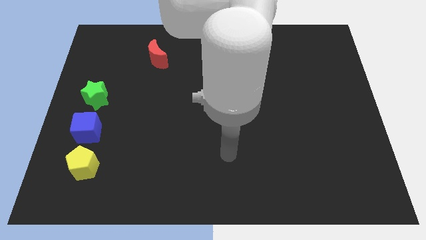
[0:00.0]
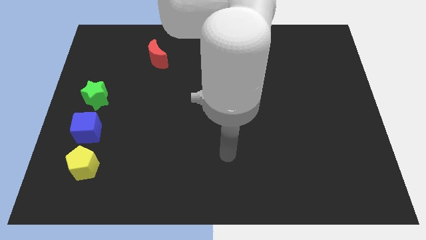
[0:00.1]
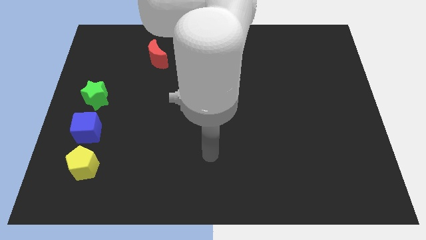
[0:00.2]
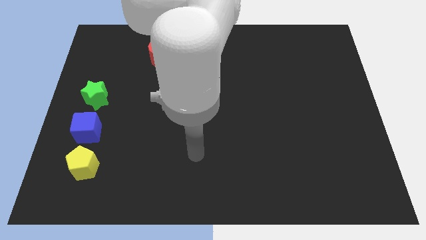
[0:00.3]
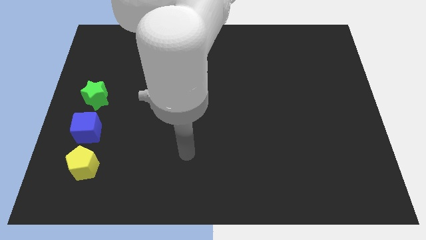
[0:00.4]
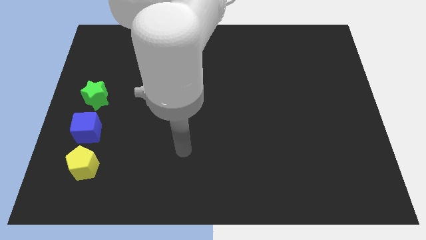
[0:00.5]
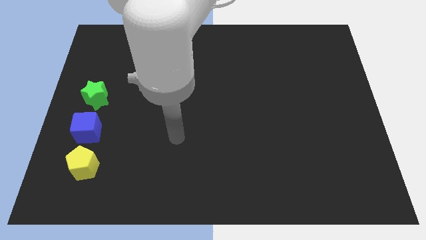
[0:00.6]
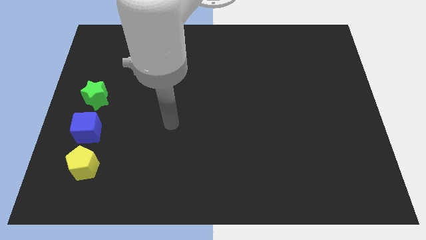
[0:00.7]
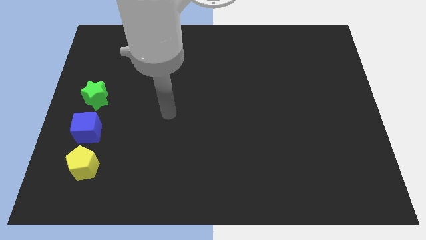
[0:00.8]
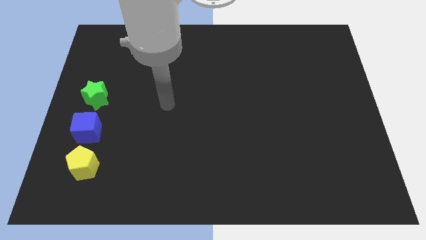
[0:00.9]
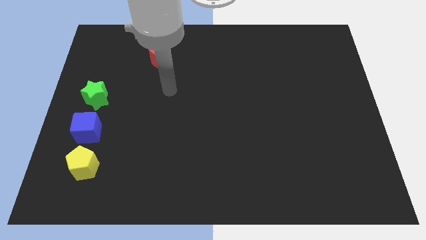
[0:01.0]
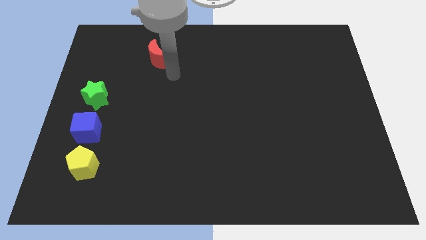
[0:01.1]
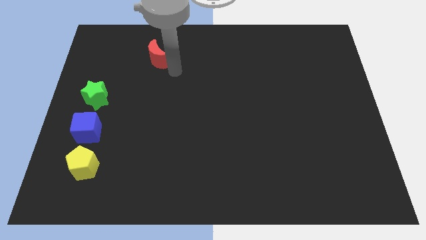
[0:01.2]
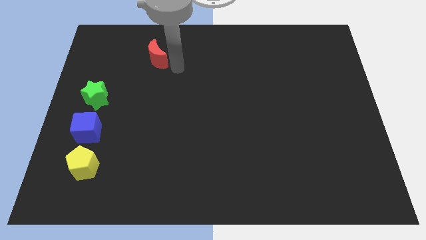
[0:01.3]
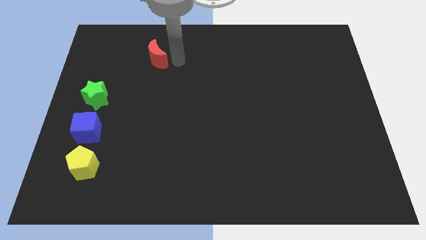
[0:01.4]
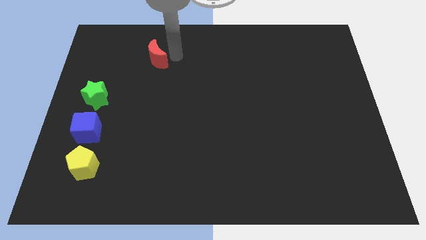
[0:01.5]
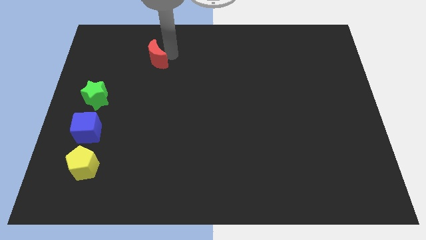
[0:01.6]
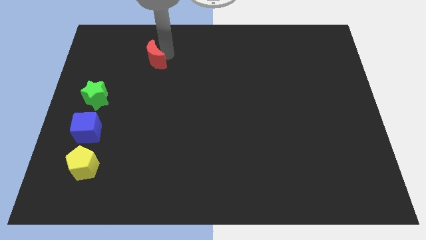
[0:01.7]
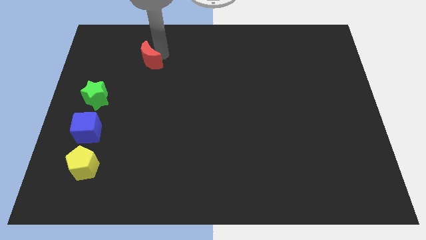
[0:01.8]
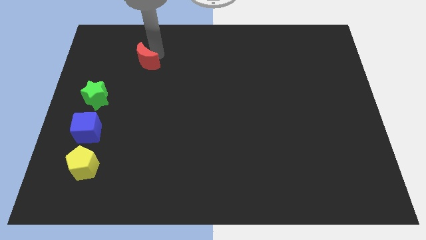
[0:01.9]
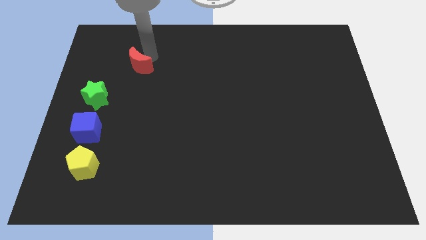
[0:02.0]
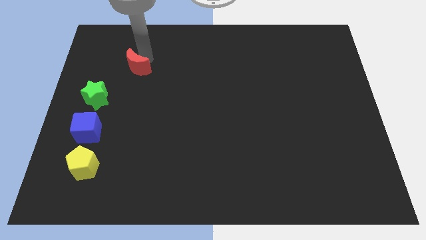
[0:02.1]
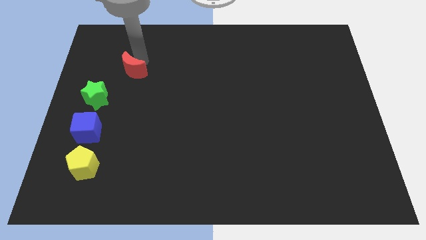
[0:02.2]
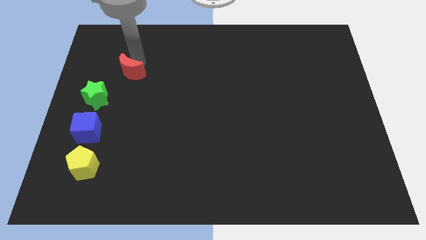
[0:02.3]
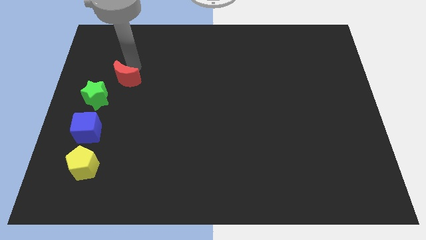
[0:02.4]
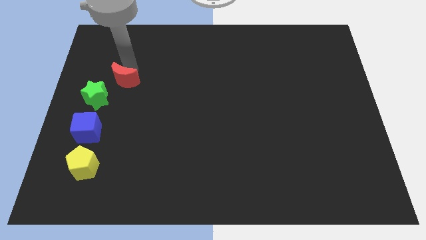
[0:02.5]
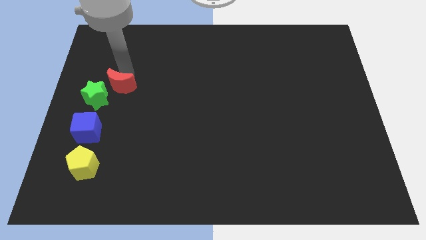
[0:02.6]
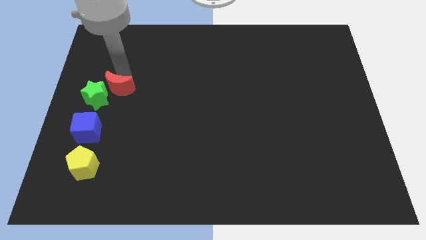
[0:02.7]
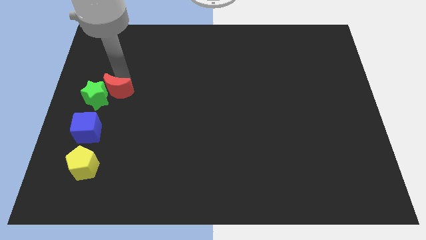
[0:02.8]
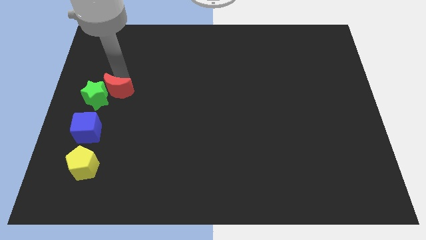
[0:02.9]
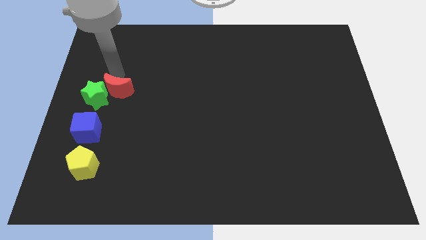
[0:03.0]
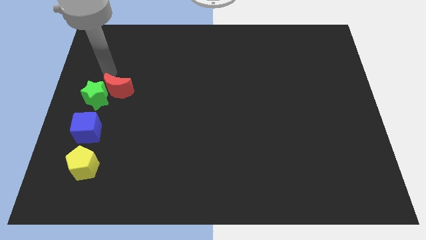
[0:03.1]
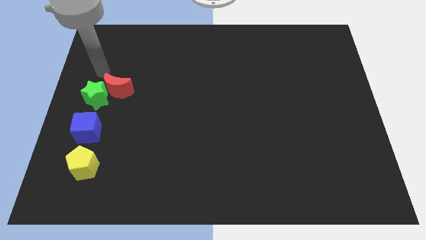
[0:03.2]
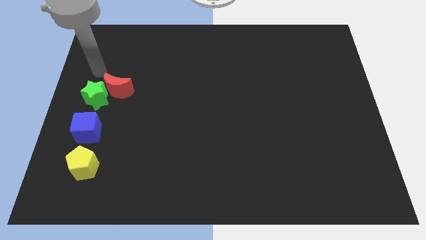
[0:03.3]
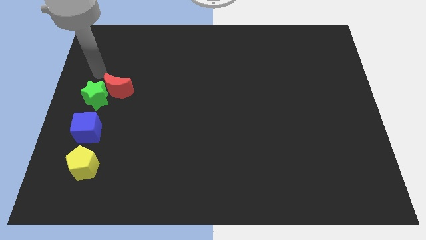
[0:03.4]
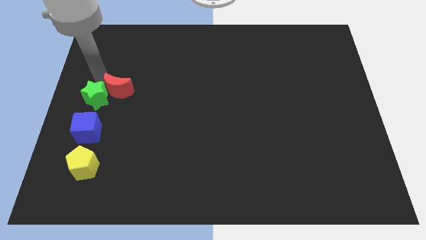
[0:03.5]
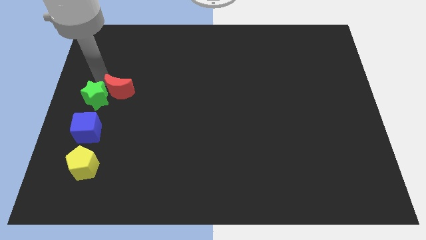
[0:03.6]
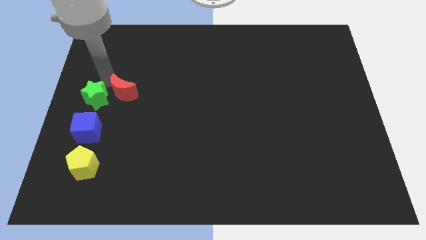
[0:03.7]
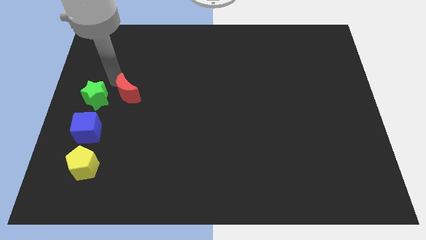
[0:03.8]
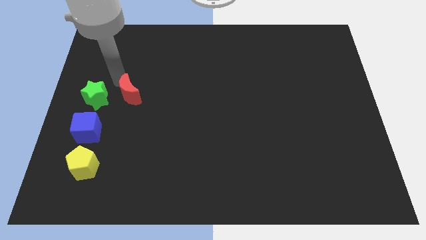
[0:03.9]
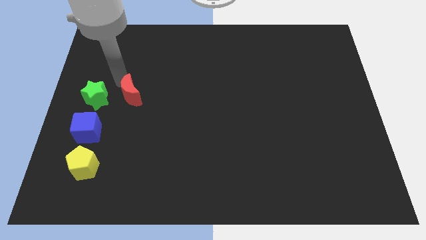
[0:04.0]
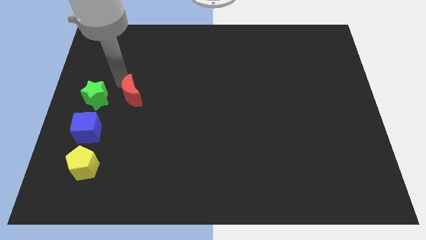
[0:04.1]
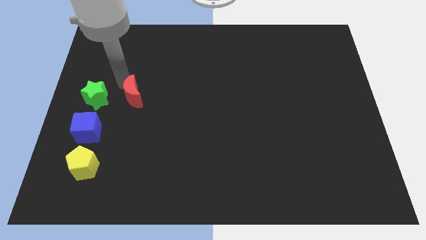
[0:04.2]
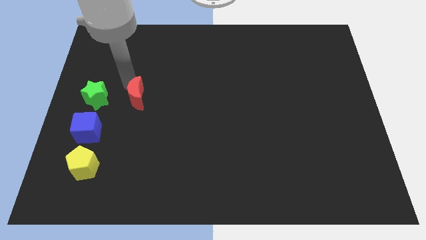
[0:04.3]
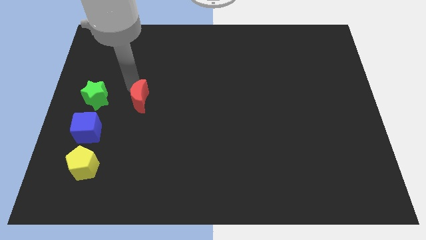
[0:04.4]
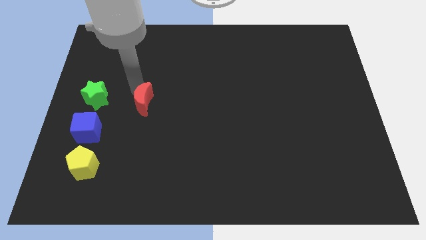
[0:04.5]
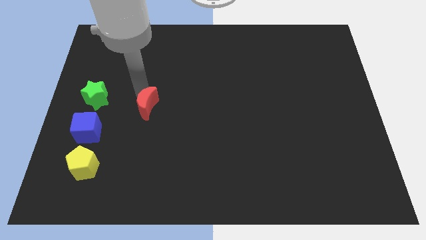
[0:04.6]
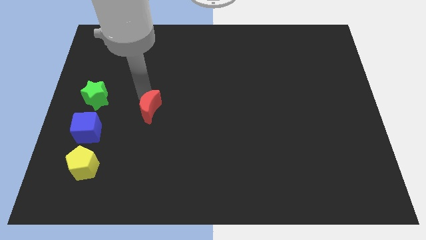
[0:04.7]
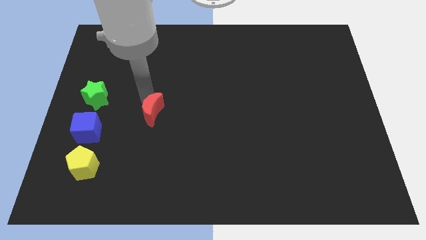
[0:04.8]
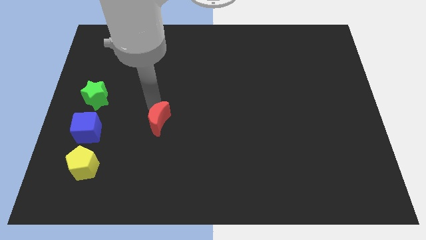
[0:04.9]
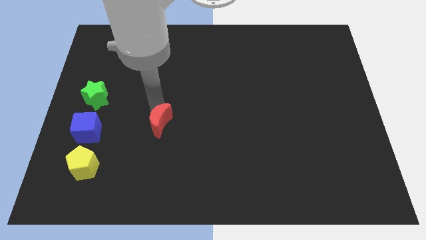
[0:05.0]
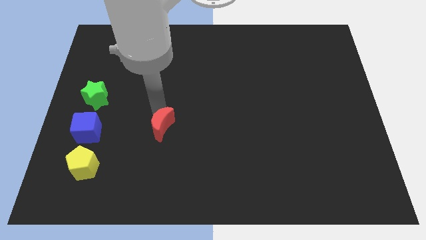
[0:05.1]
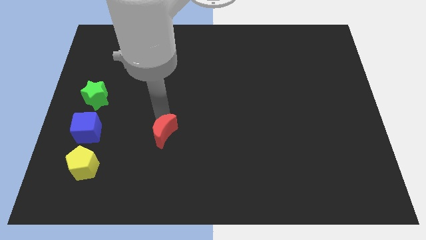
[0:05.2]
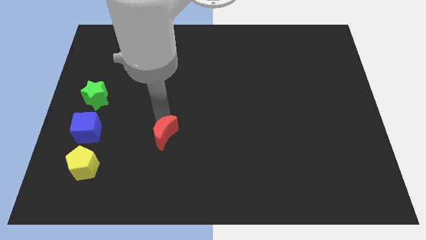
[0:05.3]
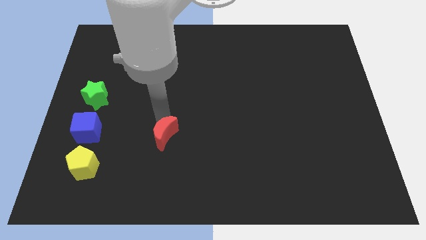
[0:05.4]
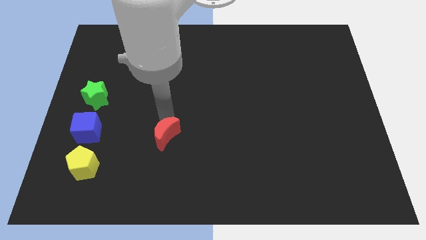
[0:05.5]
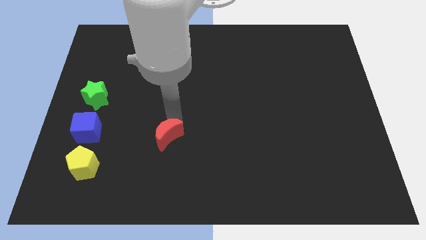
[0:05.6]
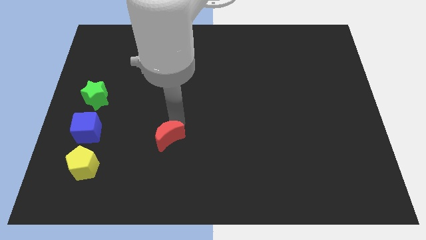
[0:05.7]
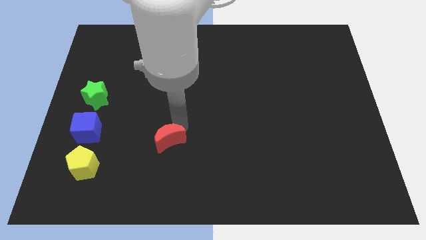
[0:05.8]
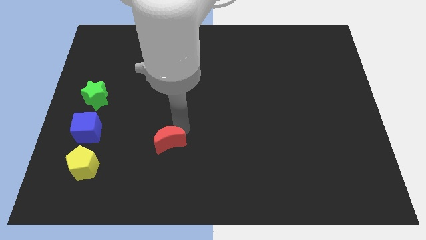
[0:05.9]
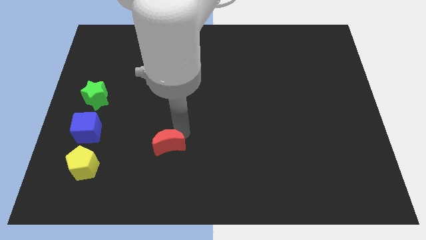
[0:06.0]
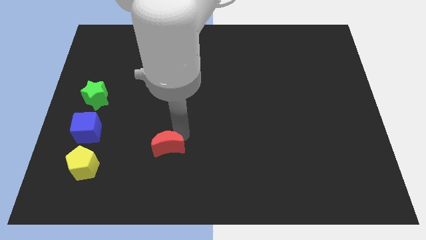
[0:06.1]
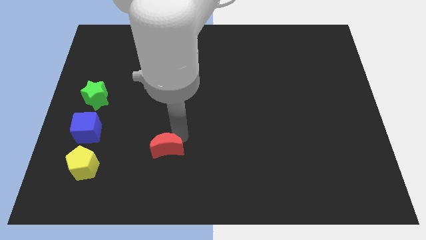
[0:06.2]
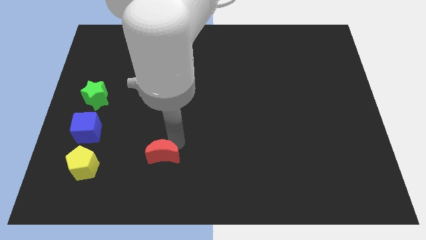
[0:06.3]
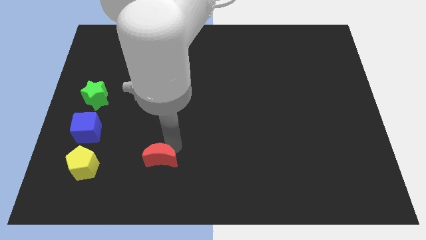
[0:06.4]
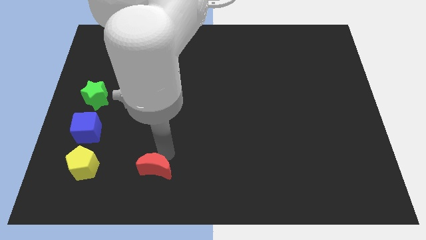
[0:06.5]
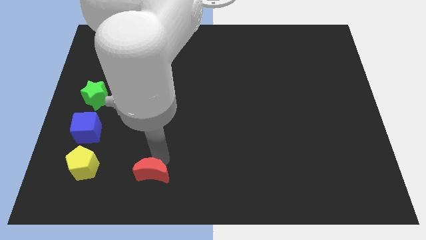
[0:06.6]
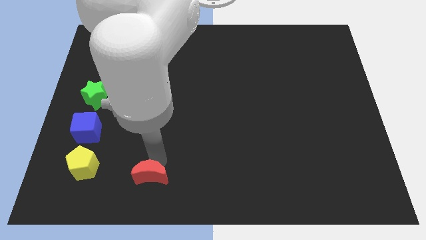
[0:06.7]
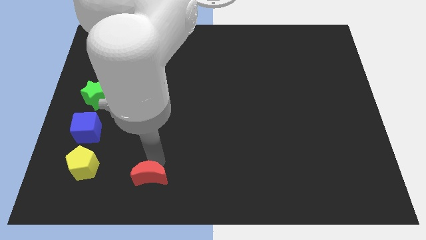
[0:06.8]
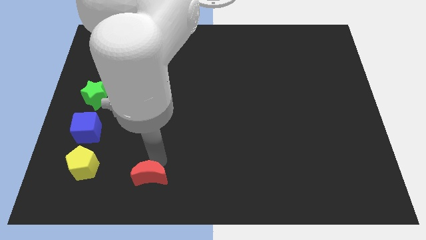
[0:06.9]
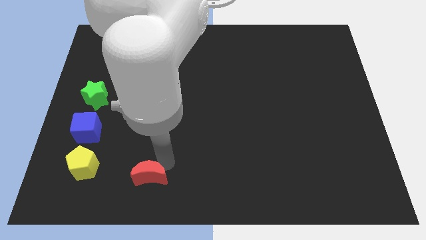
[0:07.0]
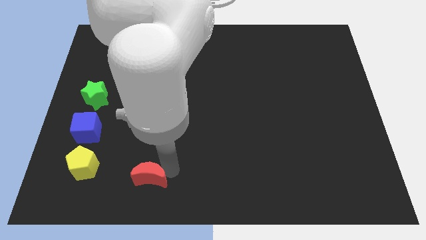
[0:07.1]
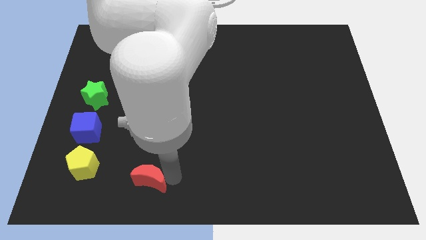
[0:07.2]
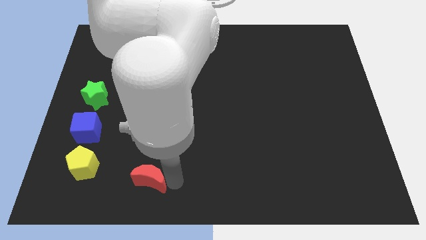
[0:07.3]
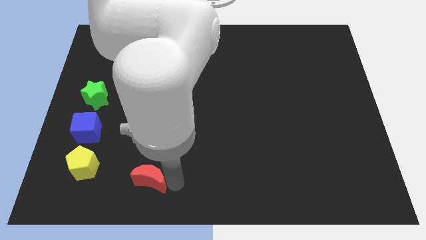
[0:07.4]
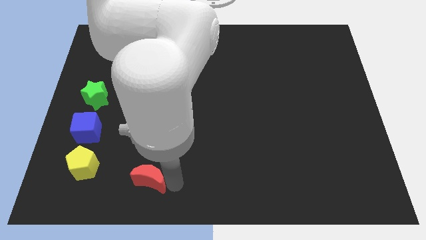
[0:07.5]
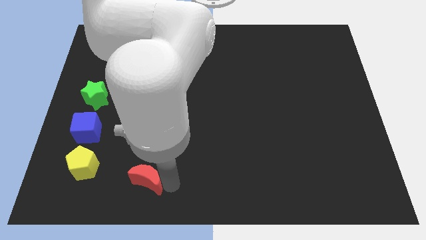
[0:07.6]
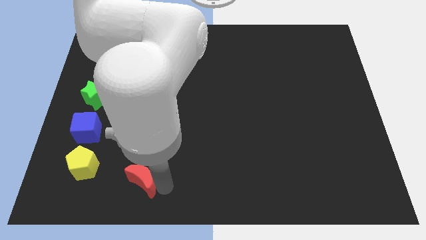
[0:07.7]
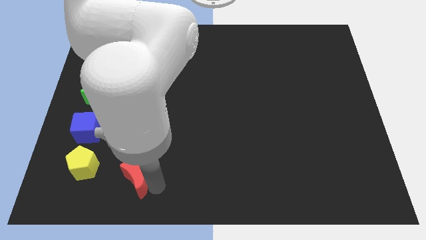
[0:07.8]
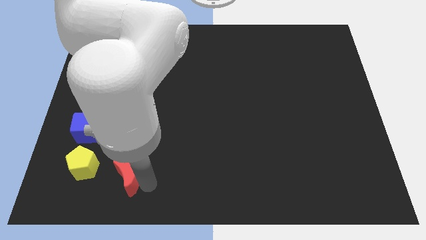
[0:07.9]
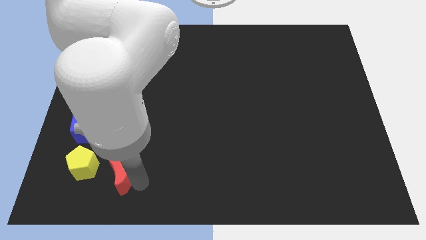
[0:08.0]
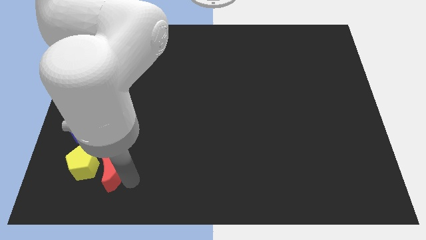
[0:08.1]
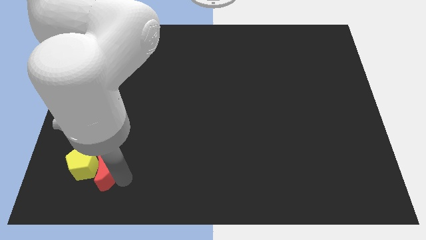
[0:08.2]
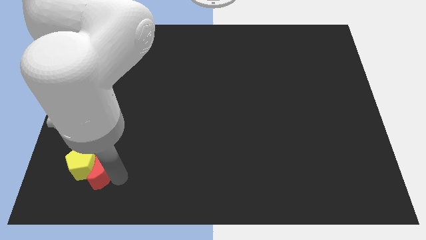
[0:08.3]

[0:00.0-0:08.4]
push the red block close to the pentagon

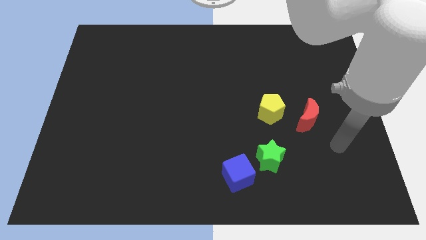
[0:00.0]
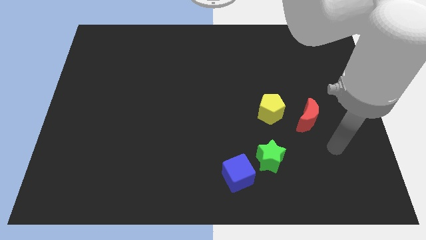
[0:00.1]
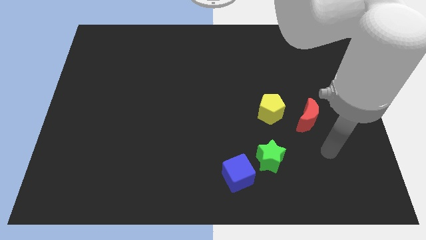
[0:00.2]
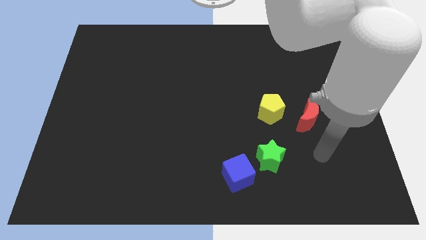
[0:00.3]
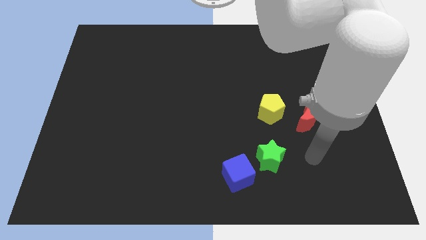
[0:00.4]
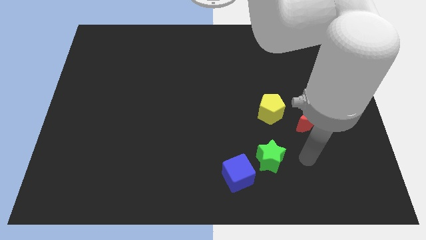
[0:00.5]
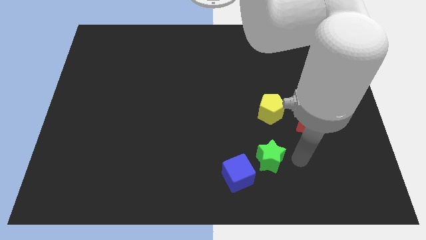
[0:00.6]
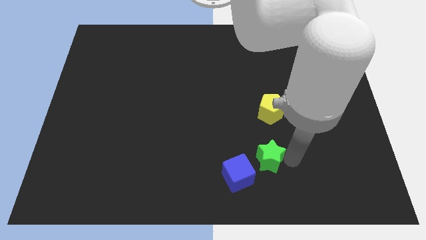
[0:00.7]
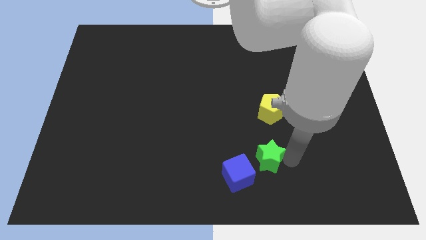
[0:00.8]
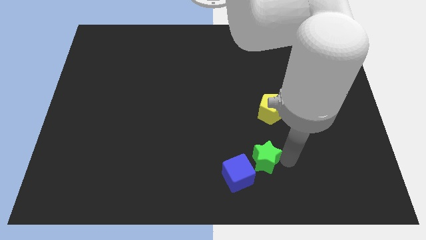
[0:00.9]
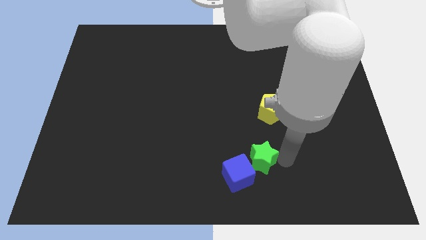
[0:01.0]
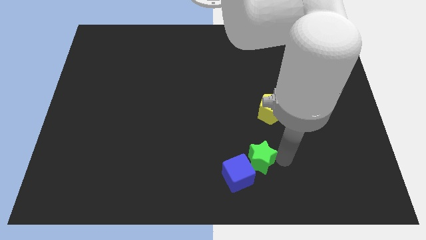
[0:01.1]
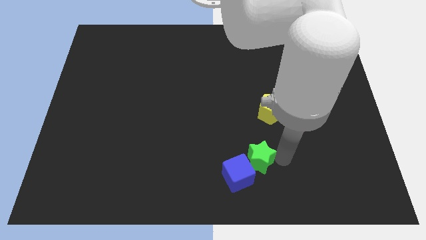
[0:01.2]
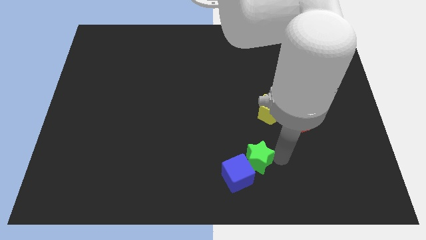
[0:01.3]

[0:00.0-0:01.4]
push the green block next to the cube
